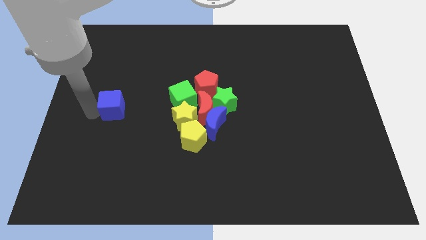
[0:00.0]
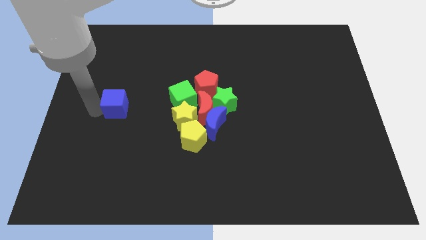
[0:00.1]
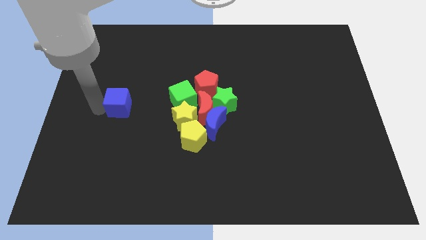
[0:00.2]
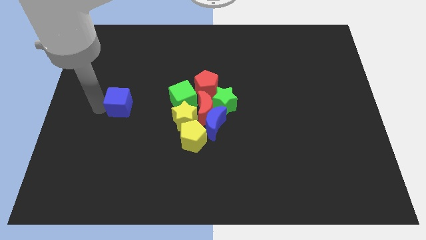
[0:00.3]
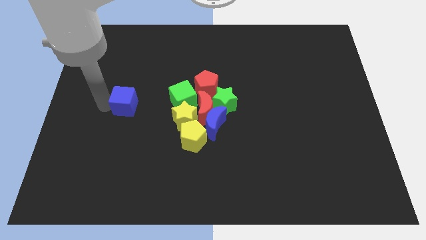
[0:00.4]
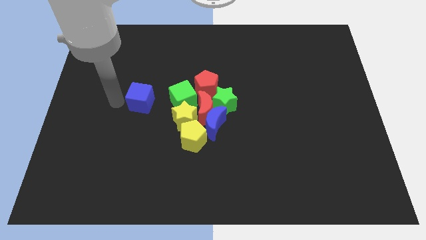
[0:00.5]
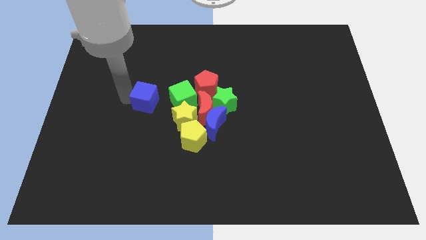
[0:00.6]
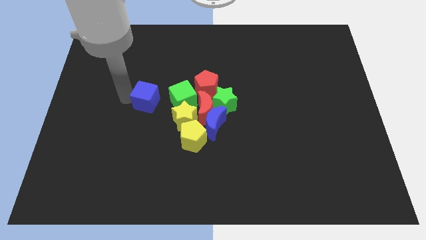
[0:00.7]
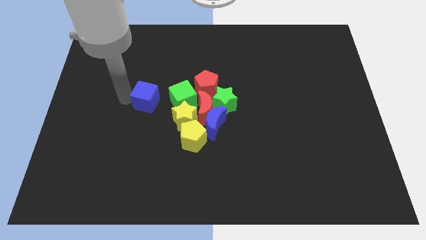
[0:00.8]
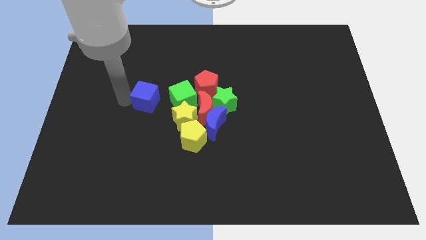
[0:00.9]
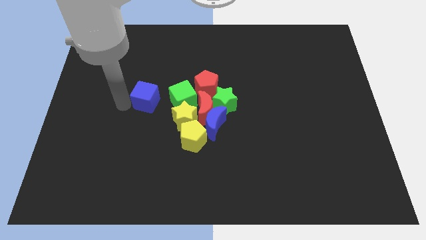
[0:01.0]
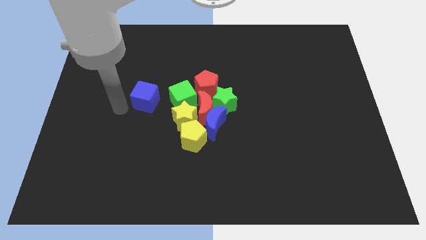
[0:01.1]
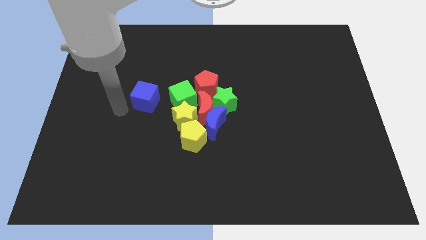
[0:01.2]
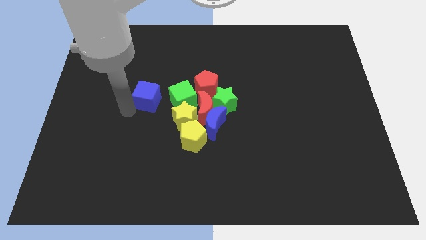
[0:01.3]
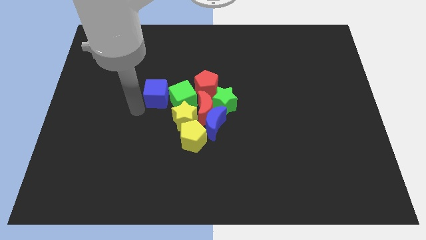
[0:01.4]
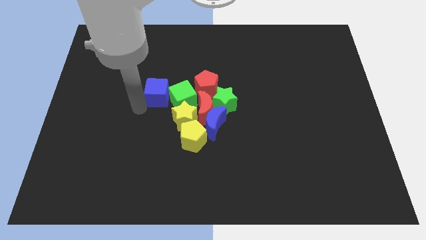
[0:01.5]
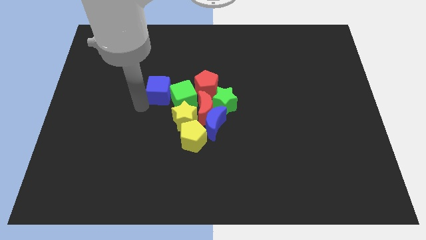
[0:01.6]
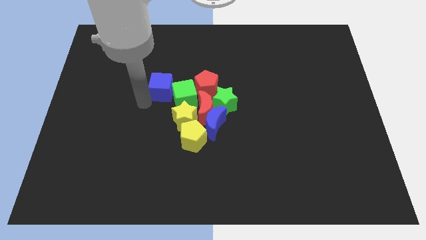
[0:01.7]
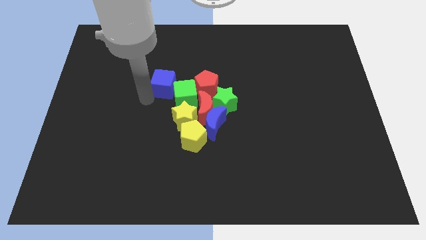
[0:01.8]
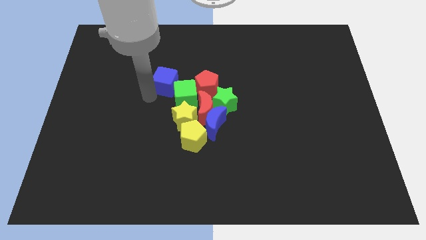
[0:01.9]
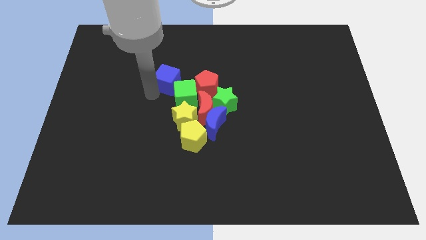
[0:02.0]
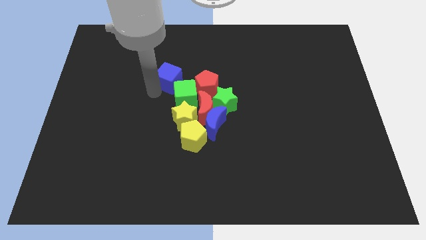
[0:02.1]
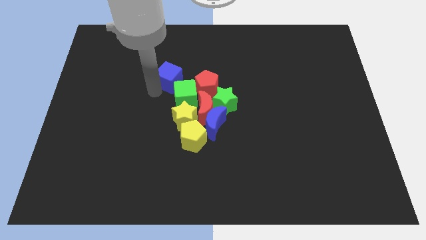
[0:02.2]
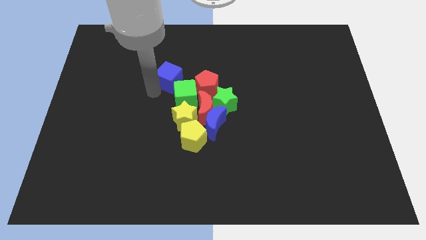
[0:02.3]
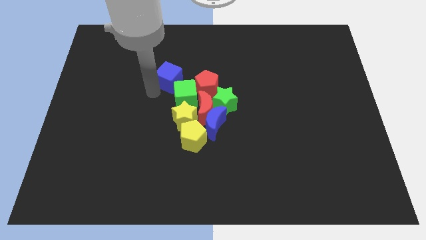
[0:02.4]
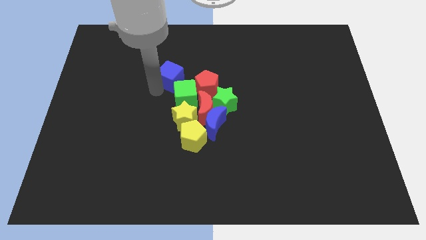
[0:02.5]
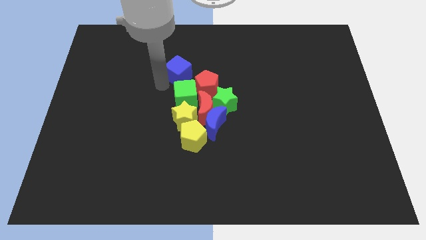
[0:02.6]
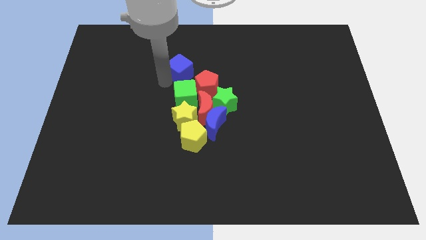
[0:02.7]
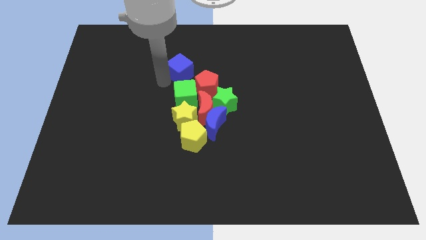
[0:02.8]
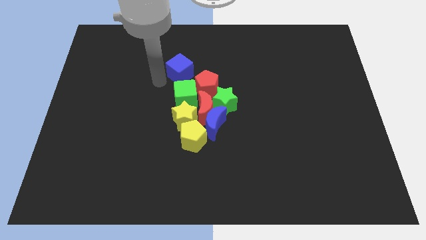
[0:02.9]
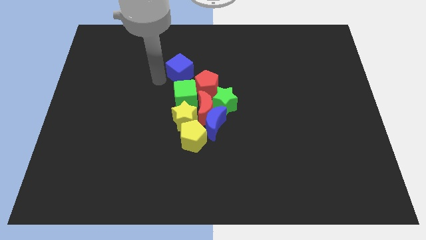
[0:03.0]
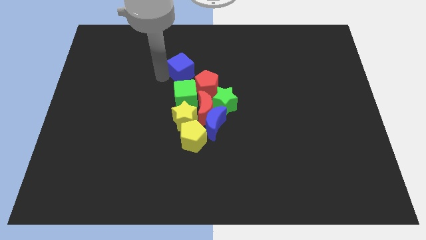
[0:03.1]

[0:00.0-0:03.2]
place the blue cube on the top of green cube

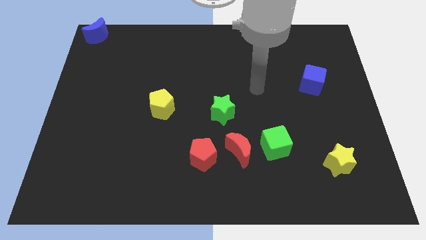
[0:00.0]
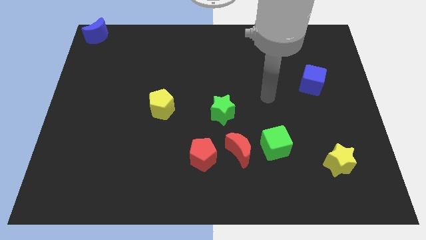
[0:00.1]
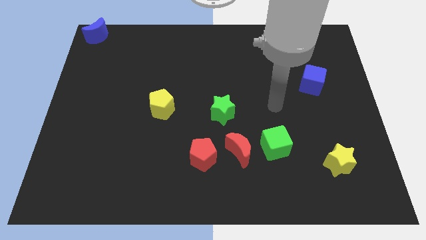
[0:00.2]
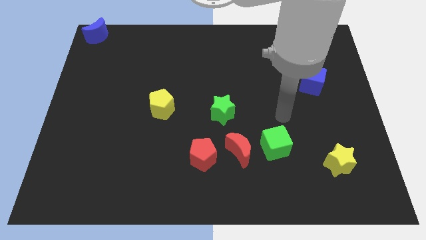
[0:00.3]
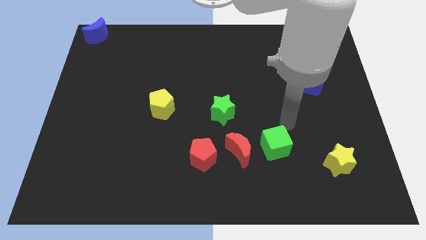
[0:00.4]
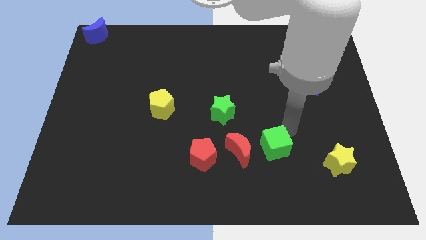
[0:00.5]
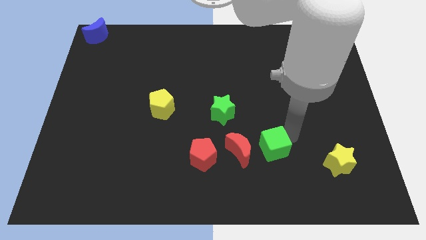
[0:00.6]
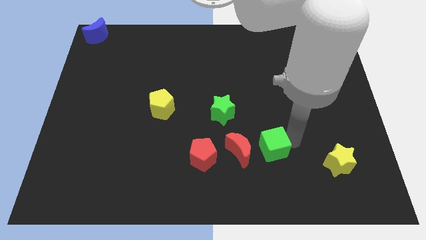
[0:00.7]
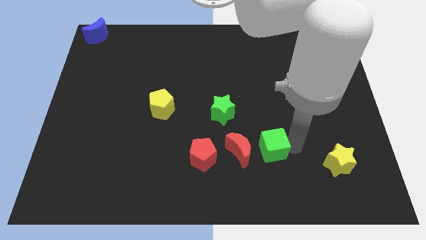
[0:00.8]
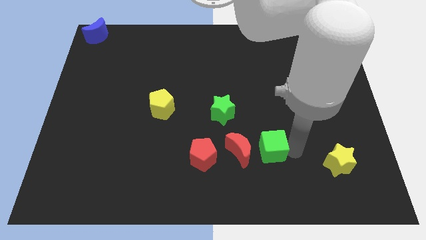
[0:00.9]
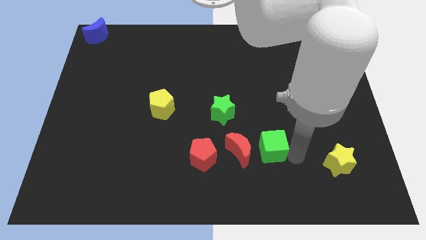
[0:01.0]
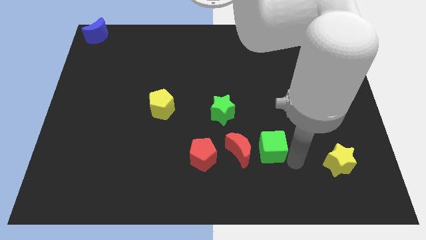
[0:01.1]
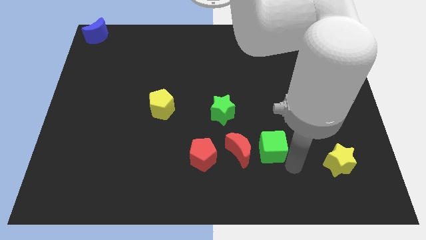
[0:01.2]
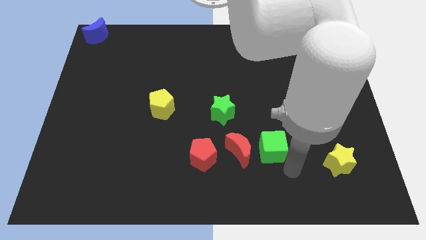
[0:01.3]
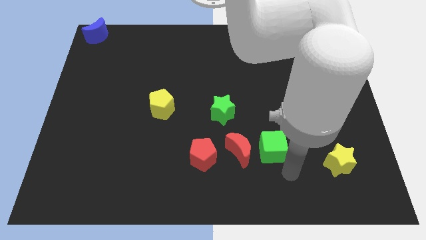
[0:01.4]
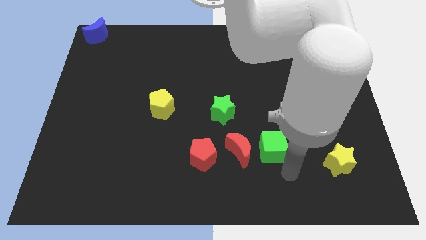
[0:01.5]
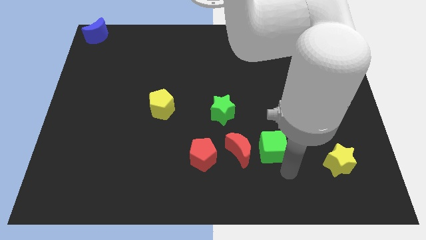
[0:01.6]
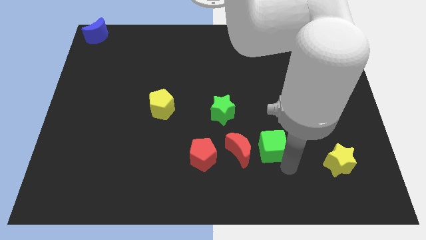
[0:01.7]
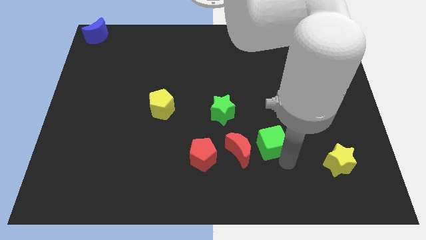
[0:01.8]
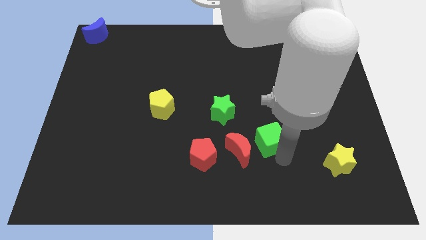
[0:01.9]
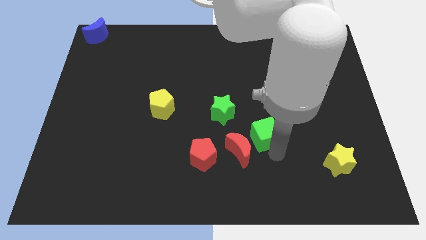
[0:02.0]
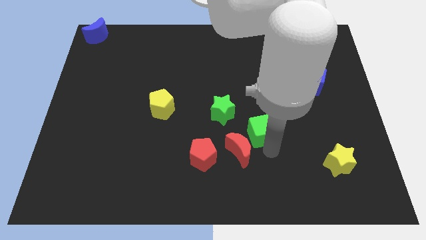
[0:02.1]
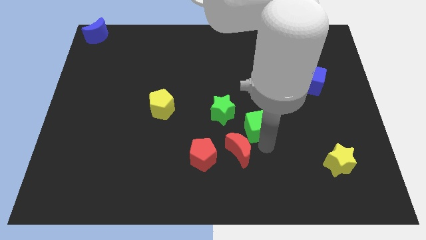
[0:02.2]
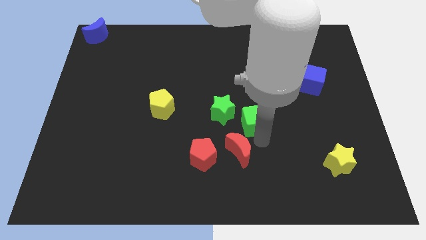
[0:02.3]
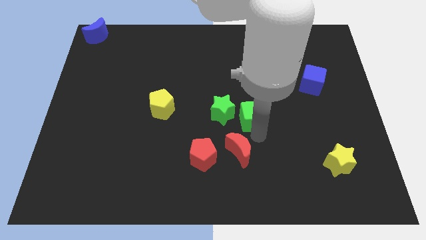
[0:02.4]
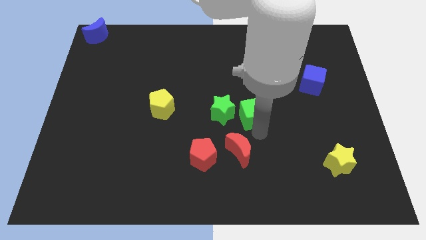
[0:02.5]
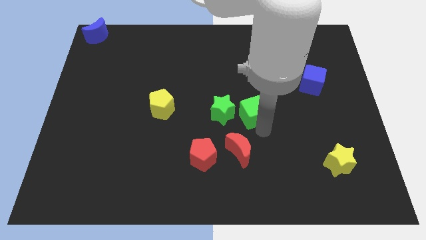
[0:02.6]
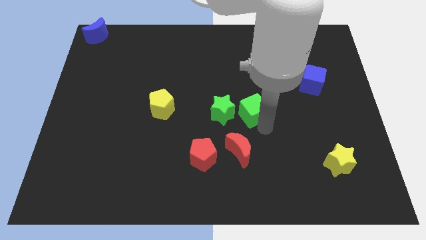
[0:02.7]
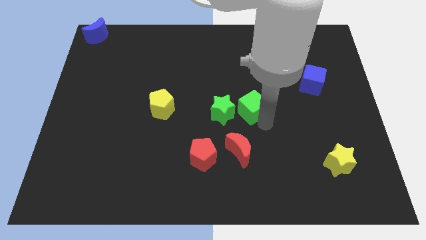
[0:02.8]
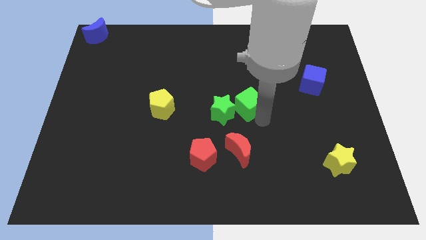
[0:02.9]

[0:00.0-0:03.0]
move the green cube close to the green star

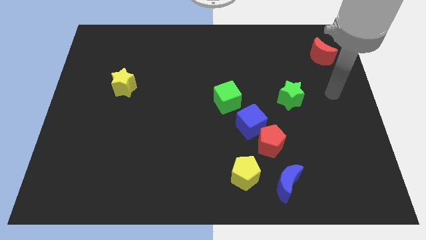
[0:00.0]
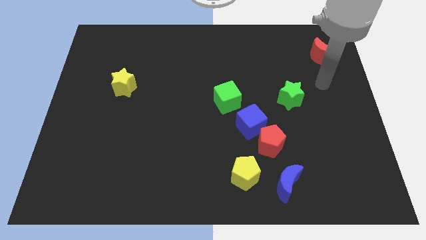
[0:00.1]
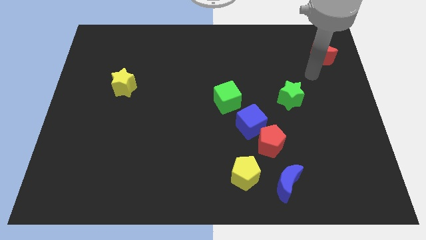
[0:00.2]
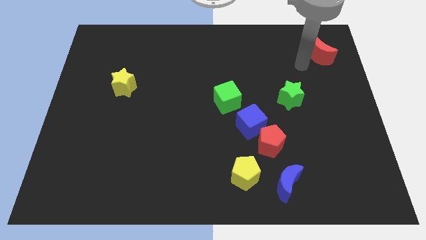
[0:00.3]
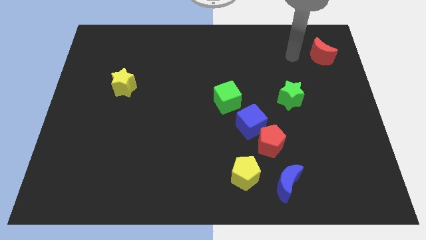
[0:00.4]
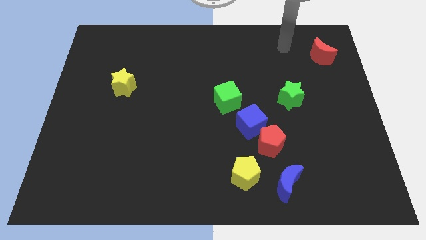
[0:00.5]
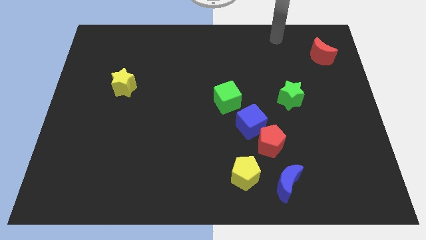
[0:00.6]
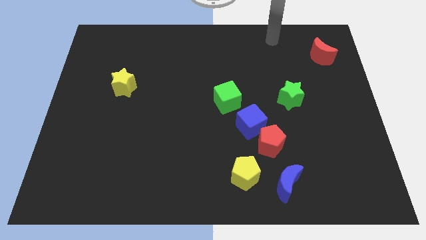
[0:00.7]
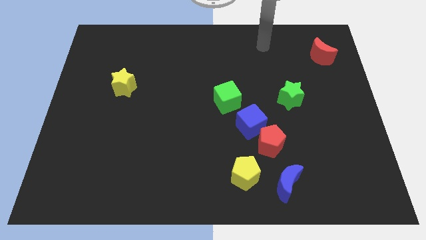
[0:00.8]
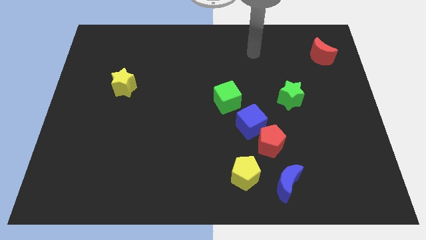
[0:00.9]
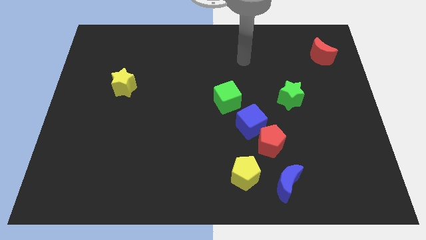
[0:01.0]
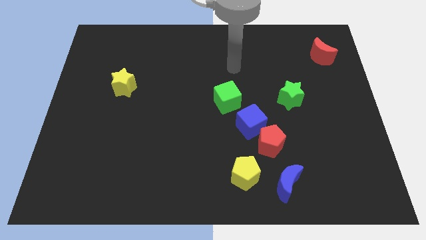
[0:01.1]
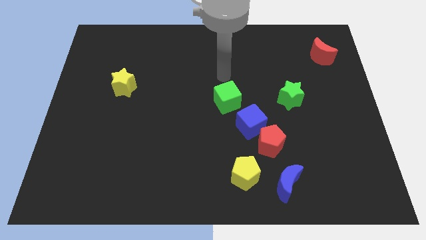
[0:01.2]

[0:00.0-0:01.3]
point the arm above the green cube

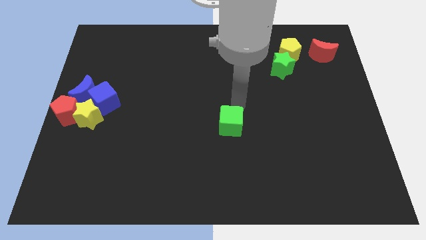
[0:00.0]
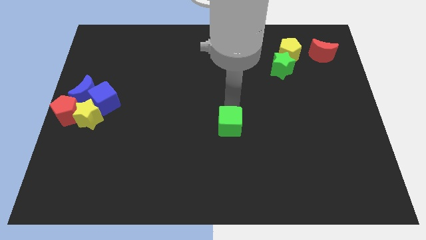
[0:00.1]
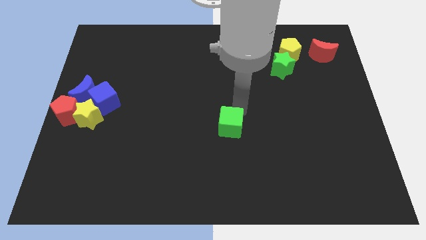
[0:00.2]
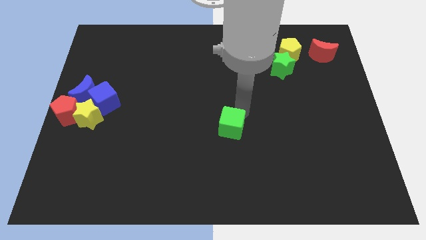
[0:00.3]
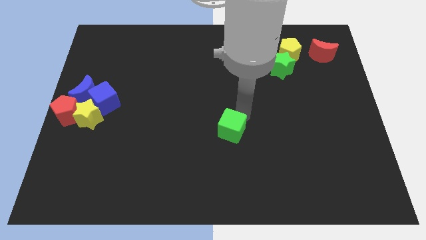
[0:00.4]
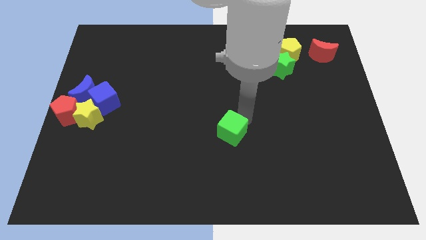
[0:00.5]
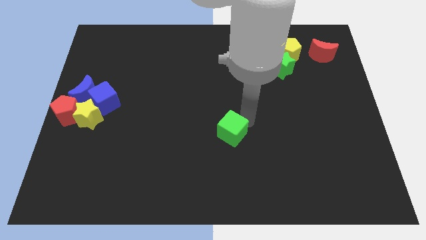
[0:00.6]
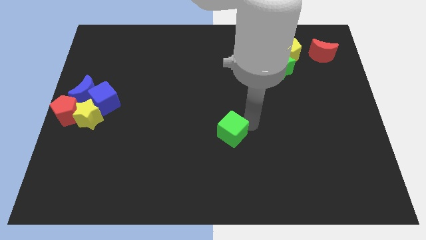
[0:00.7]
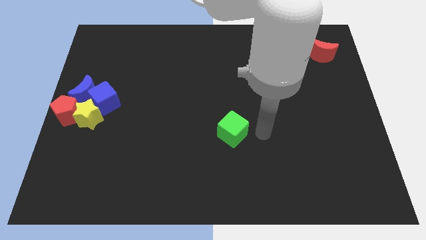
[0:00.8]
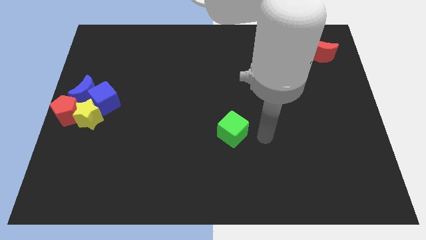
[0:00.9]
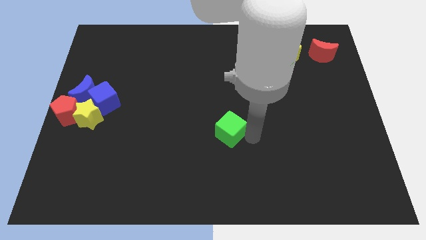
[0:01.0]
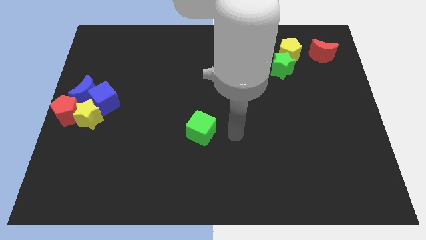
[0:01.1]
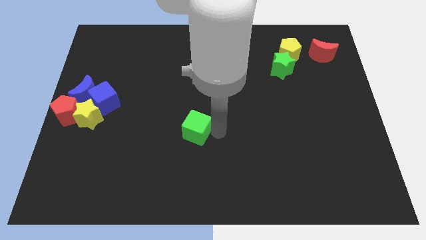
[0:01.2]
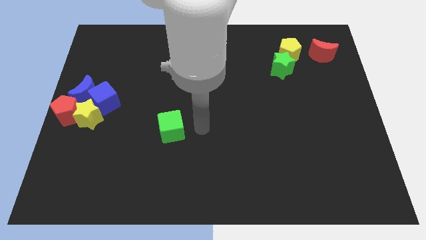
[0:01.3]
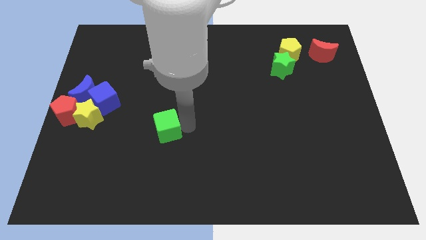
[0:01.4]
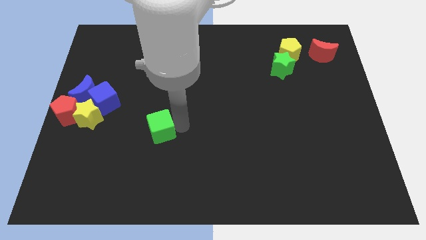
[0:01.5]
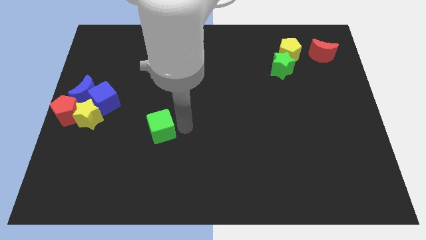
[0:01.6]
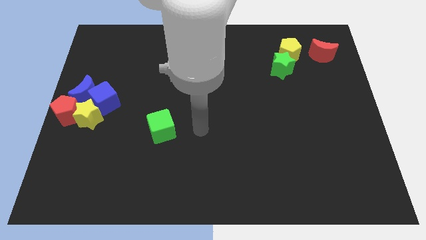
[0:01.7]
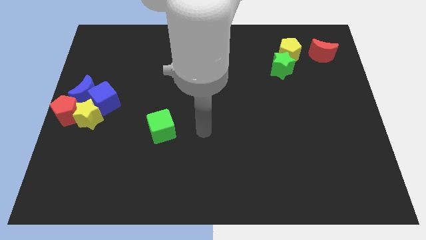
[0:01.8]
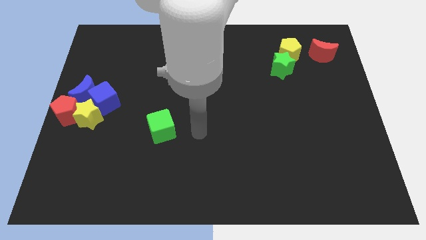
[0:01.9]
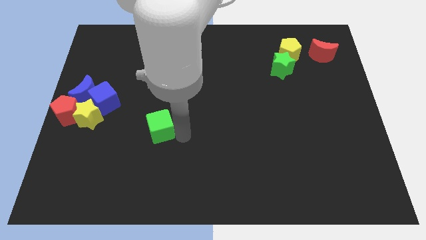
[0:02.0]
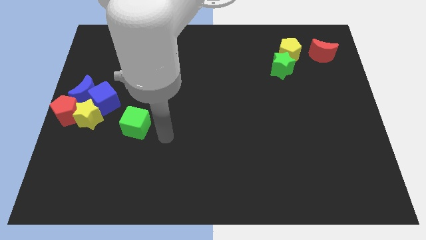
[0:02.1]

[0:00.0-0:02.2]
push green cube towards yeelow star
